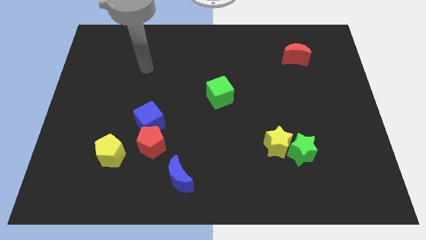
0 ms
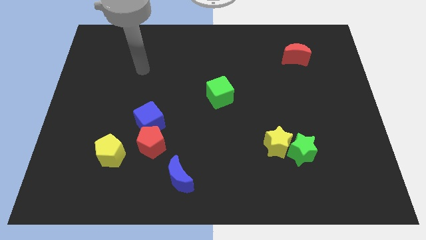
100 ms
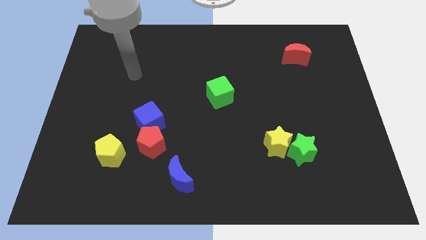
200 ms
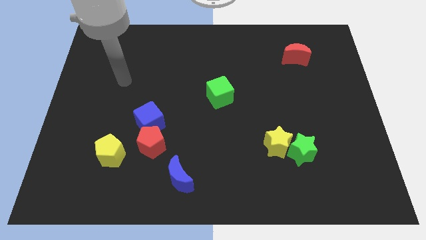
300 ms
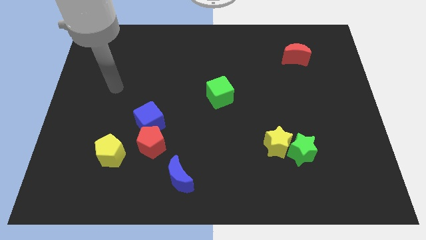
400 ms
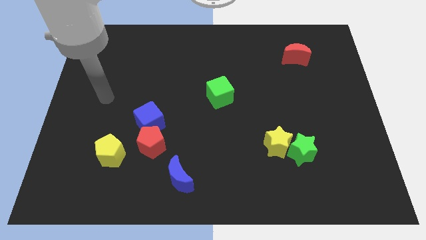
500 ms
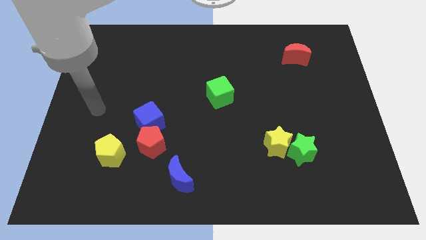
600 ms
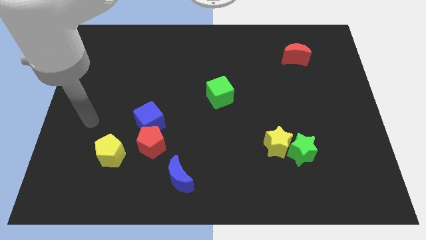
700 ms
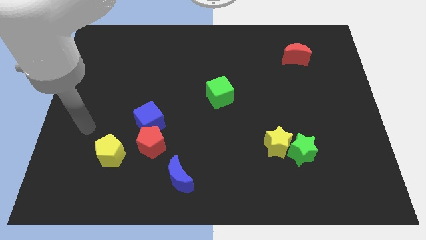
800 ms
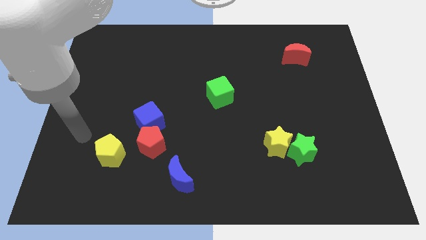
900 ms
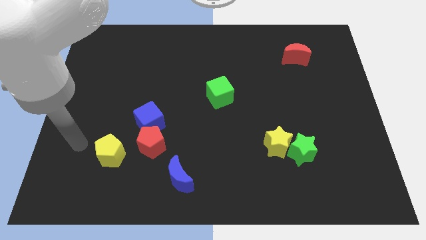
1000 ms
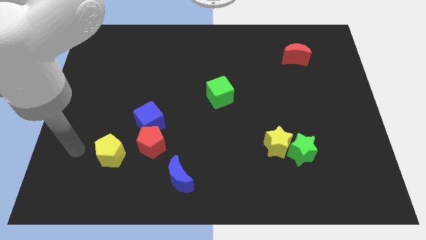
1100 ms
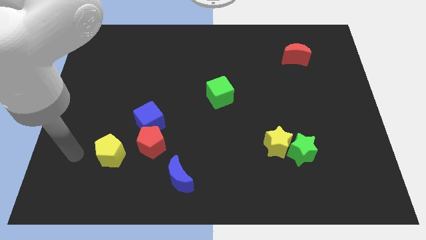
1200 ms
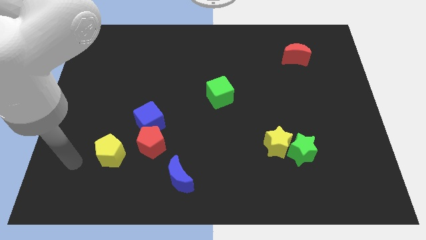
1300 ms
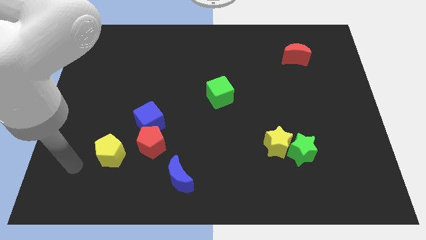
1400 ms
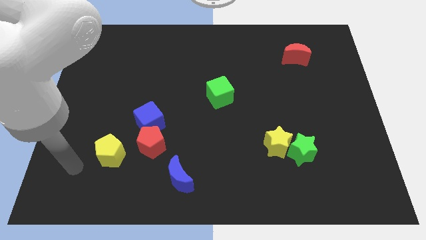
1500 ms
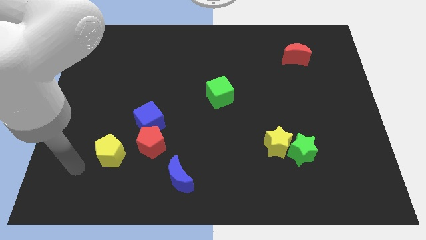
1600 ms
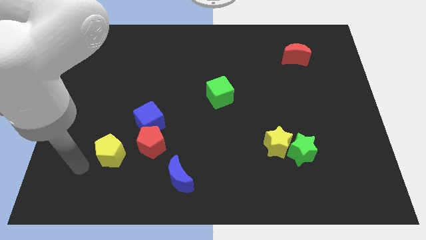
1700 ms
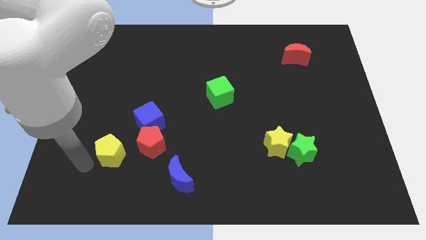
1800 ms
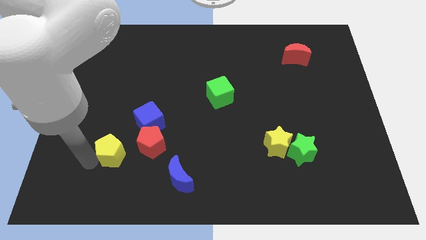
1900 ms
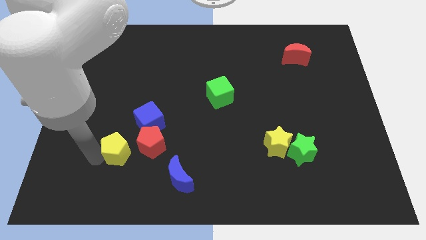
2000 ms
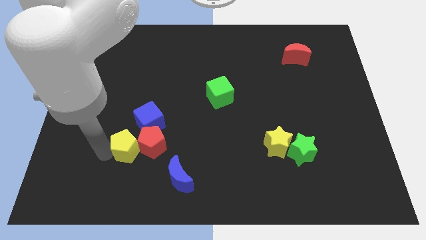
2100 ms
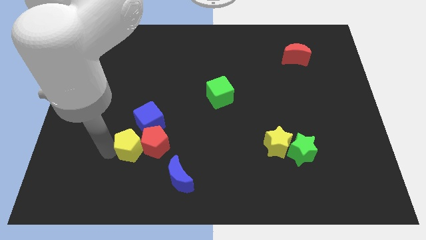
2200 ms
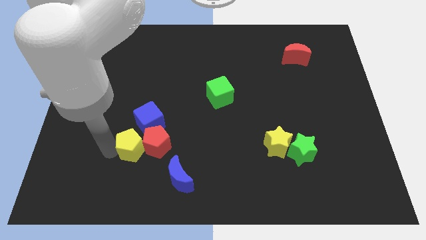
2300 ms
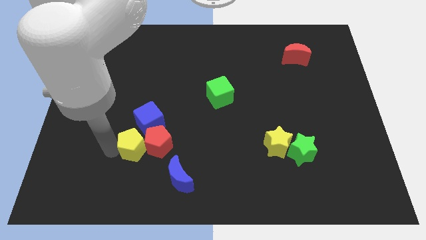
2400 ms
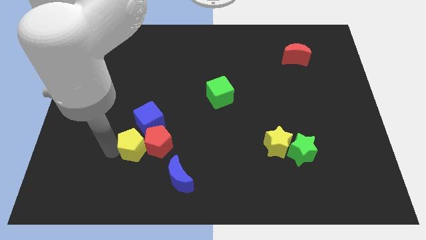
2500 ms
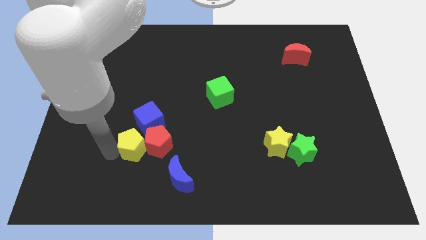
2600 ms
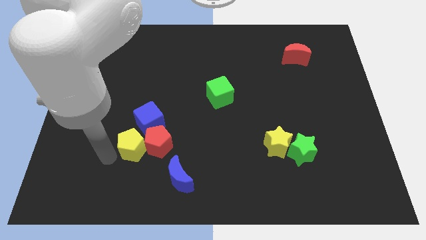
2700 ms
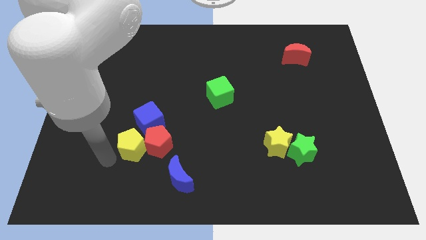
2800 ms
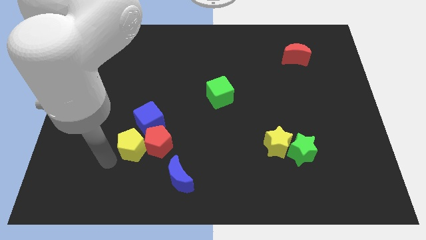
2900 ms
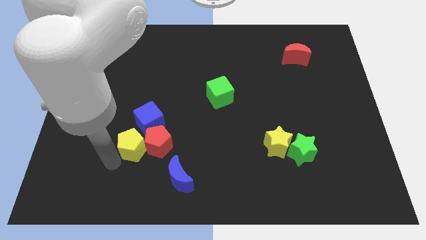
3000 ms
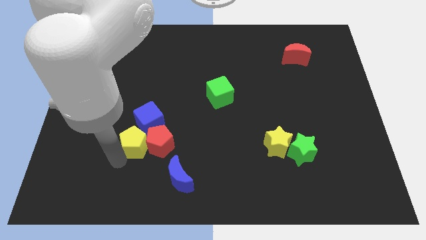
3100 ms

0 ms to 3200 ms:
move the yellow pentagon into the red pentagon

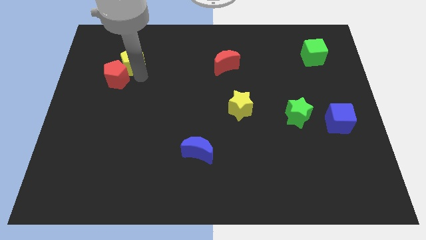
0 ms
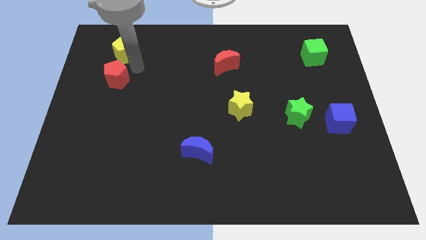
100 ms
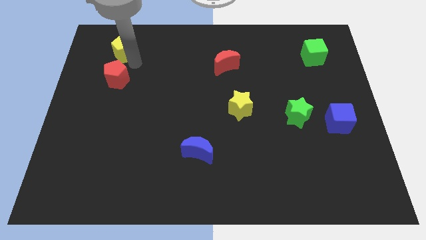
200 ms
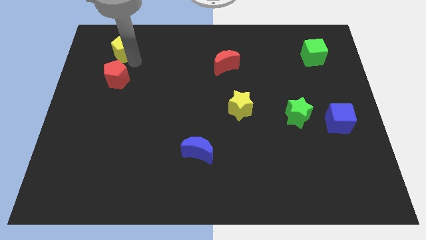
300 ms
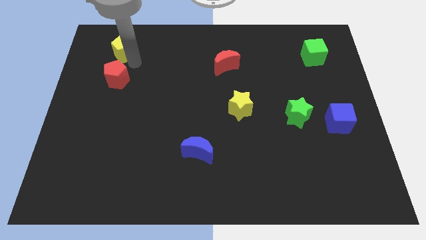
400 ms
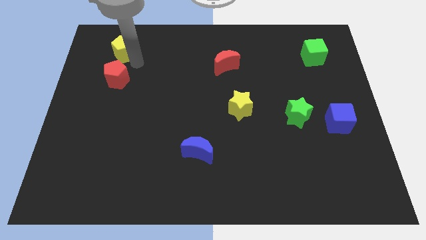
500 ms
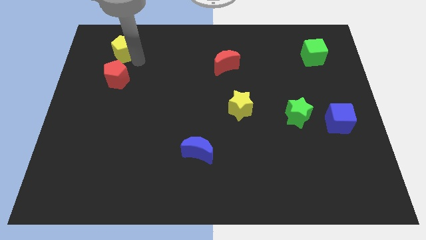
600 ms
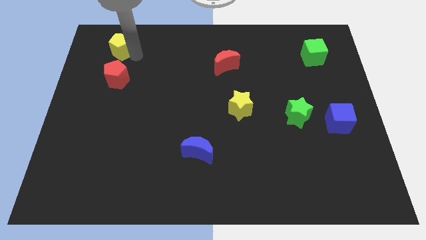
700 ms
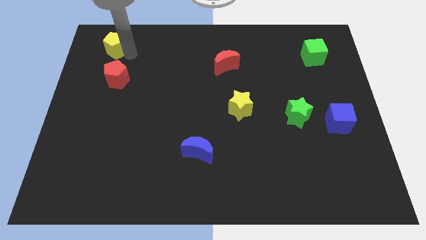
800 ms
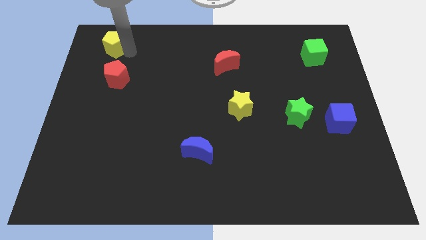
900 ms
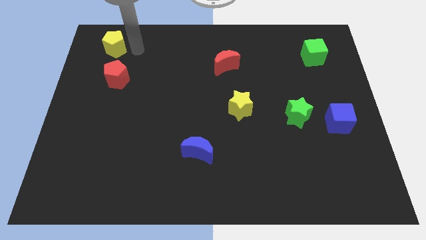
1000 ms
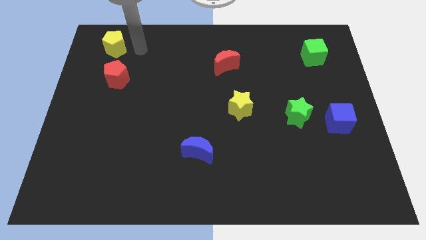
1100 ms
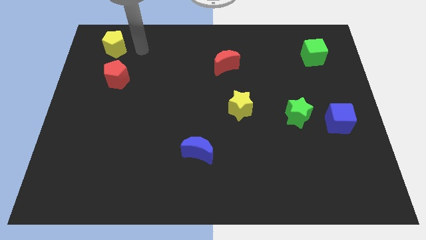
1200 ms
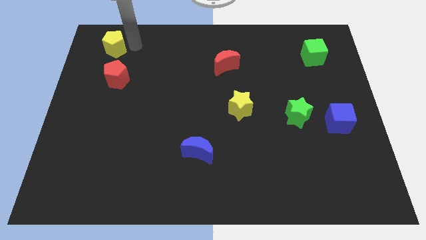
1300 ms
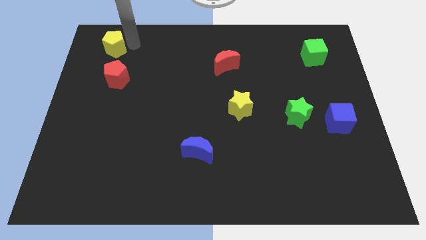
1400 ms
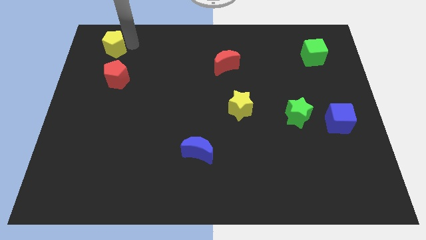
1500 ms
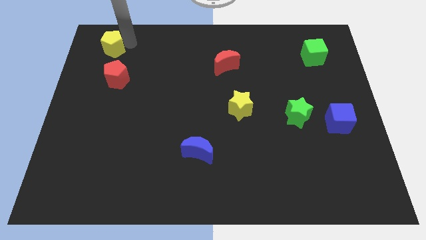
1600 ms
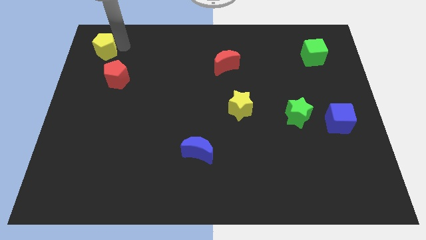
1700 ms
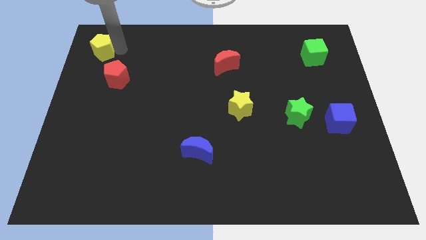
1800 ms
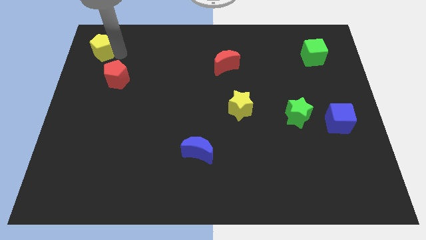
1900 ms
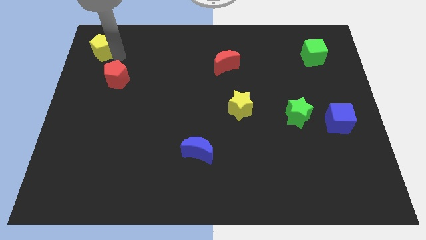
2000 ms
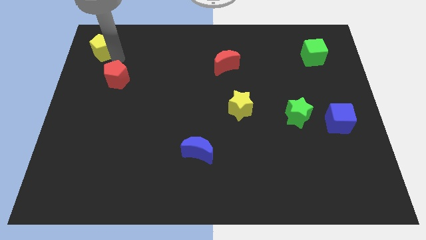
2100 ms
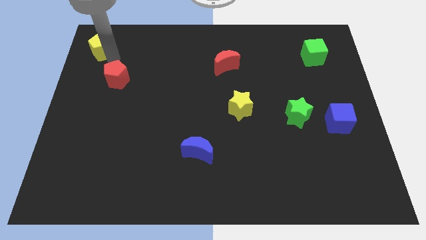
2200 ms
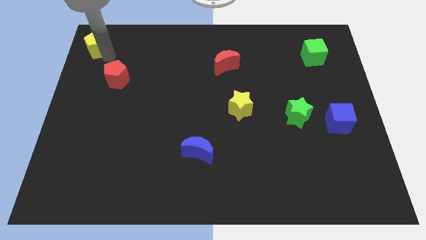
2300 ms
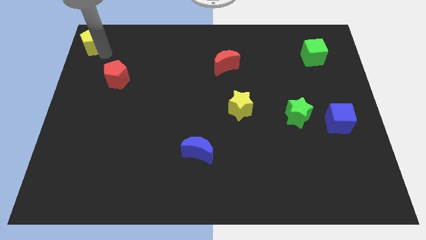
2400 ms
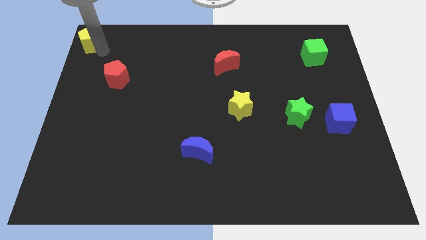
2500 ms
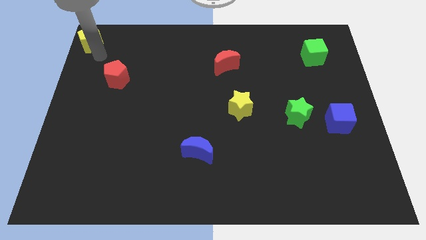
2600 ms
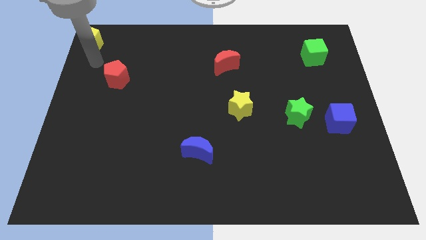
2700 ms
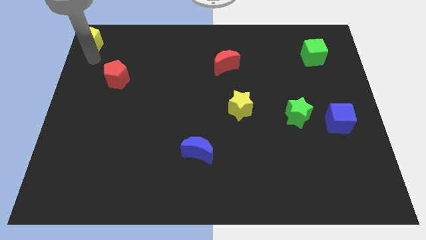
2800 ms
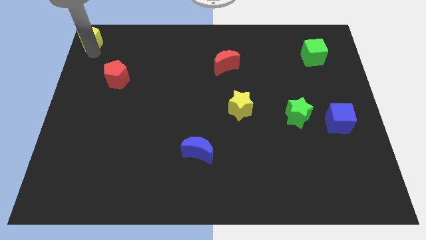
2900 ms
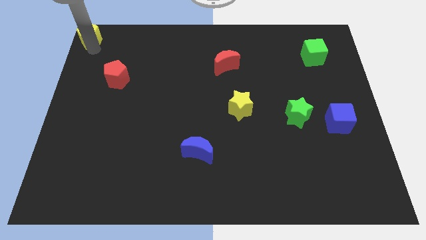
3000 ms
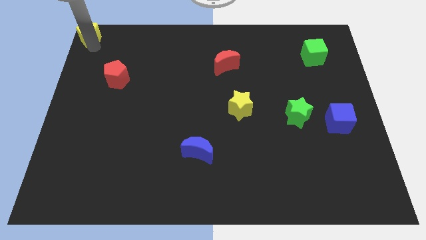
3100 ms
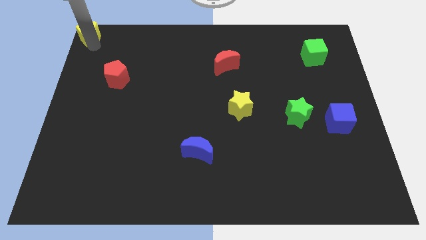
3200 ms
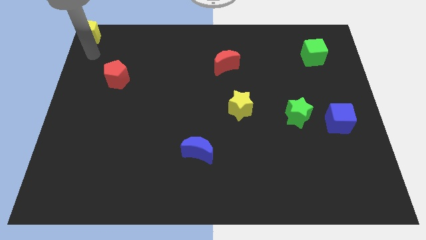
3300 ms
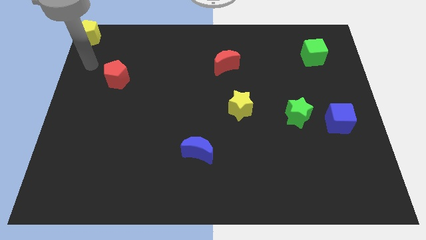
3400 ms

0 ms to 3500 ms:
move the yellow pentagon to the top left corner of the board

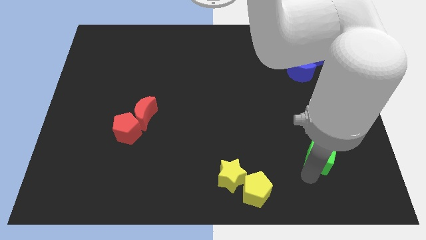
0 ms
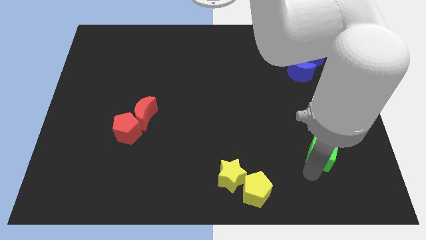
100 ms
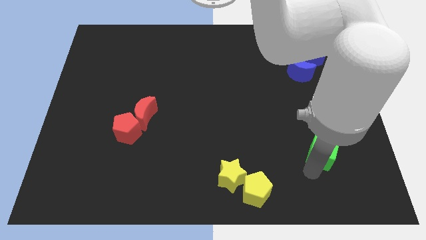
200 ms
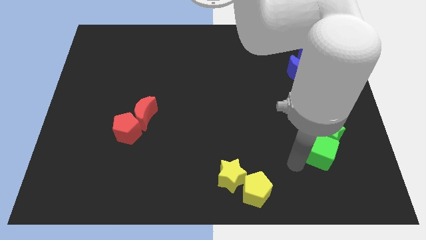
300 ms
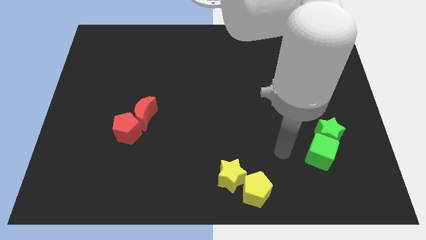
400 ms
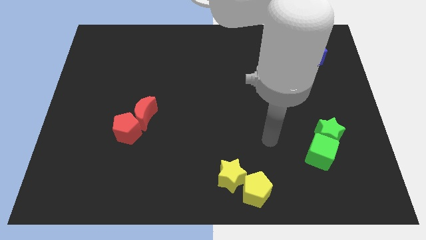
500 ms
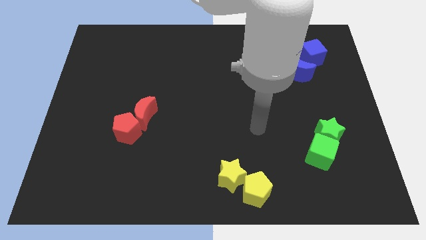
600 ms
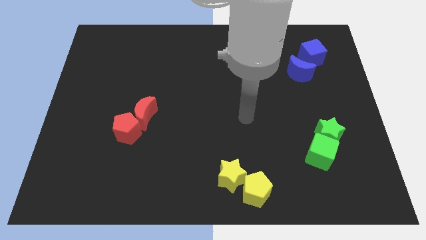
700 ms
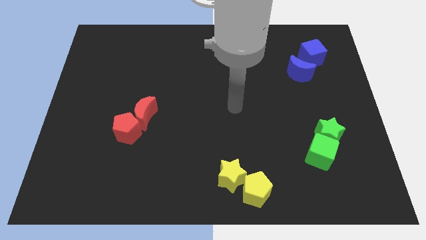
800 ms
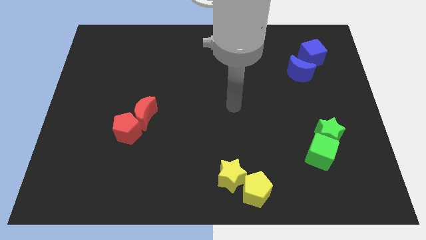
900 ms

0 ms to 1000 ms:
move arm away from green cube

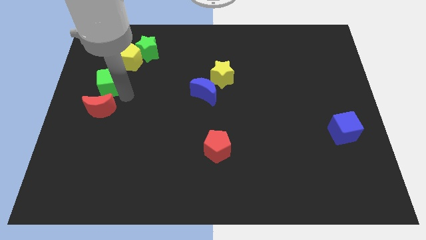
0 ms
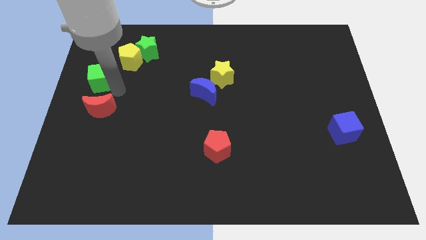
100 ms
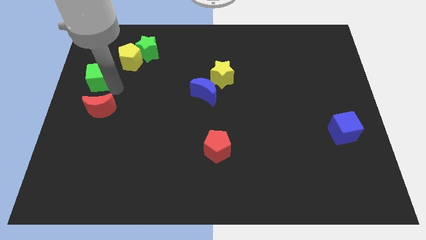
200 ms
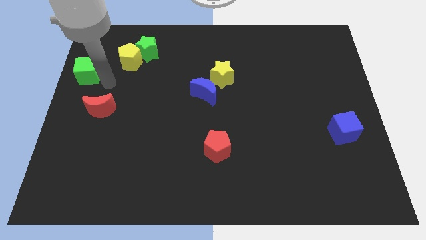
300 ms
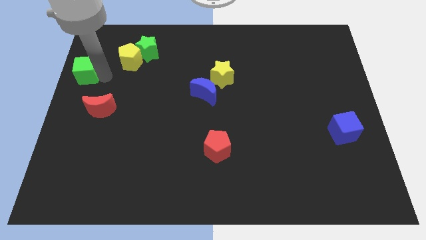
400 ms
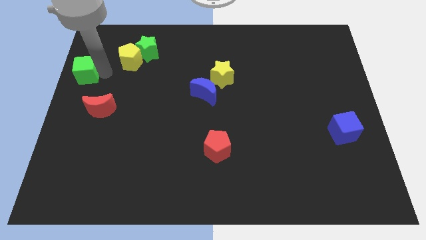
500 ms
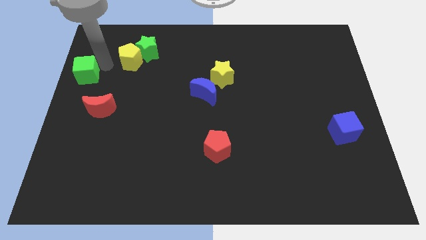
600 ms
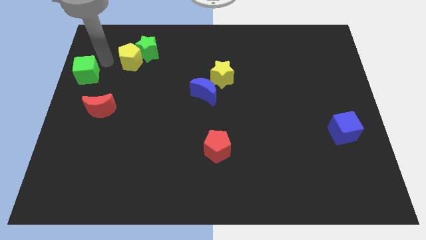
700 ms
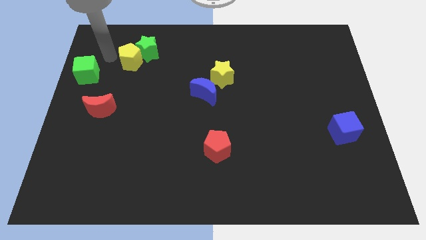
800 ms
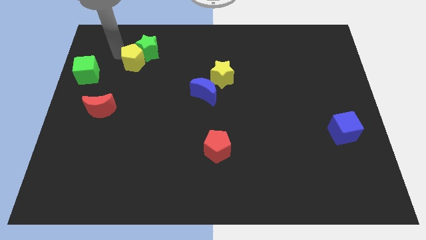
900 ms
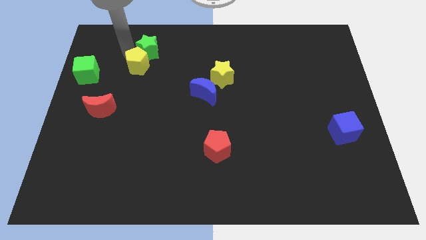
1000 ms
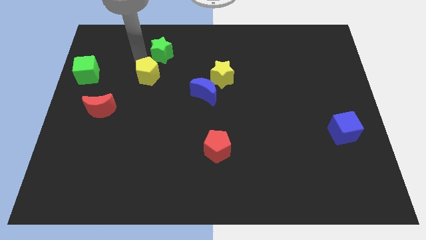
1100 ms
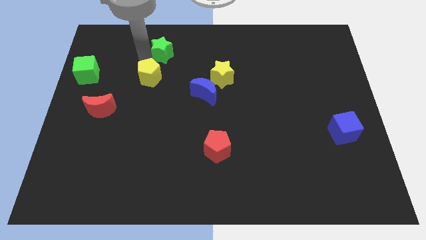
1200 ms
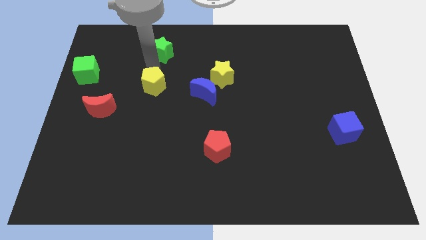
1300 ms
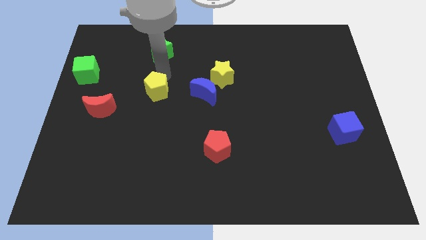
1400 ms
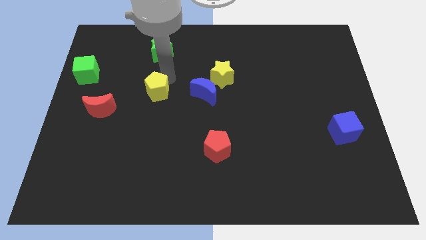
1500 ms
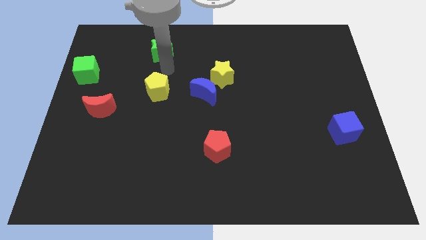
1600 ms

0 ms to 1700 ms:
slightly push the yellow pentagon towards the blue moon
